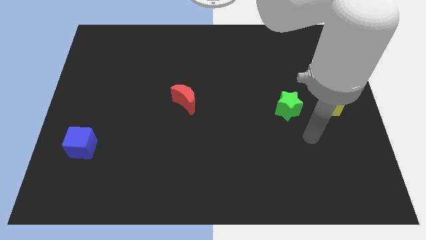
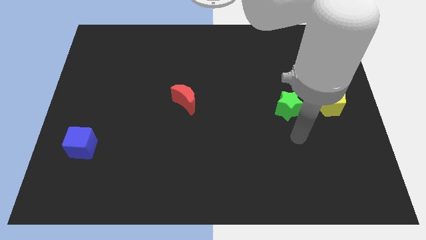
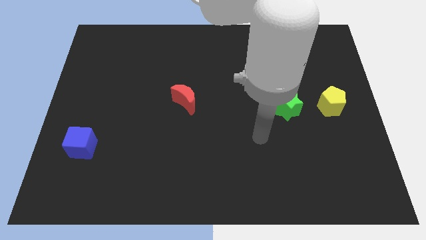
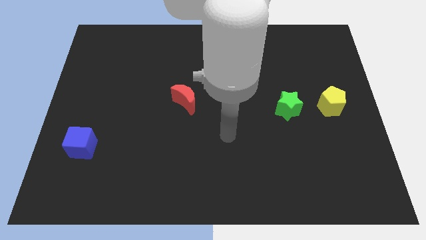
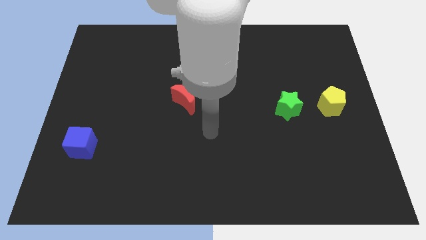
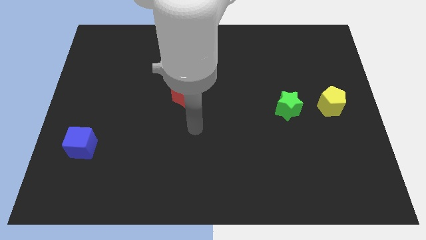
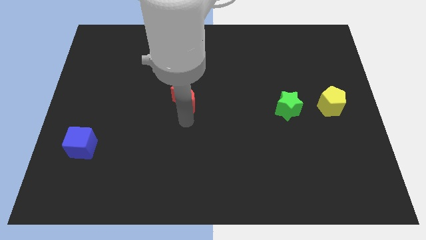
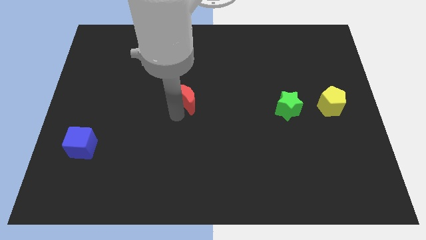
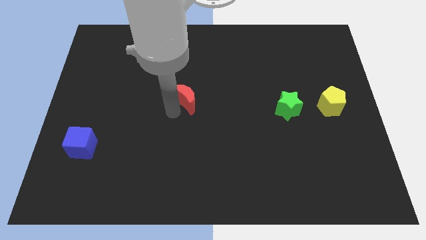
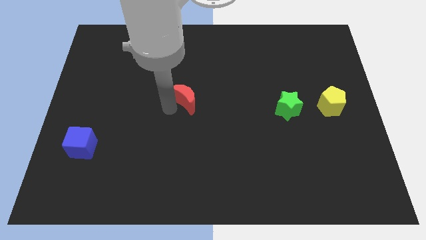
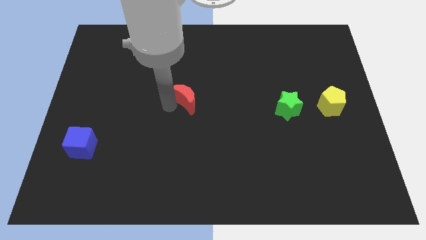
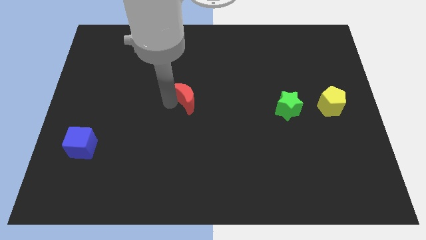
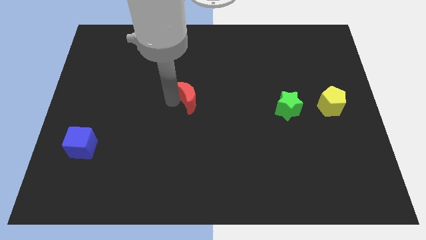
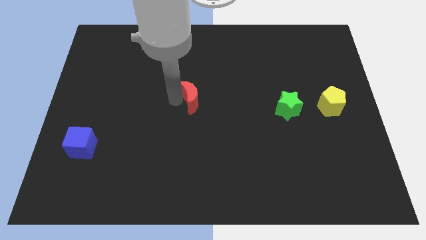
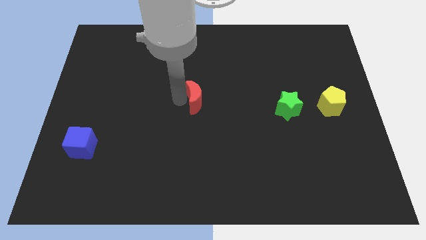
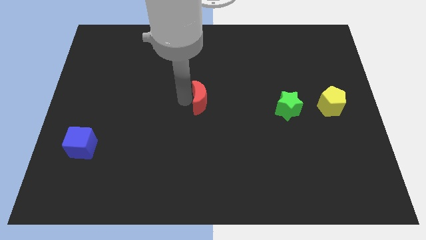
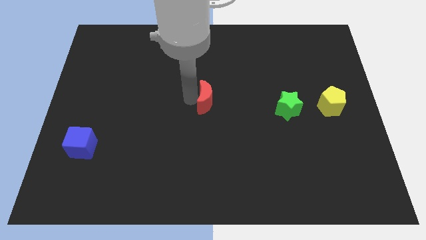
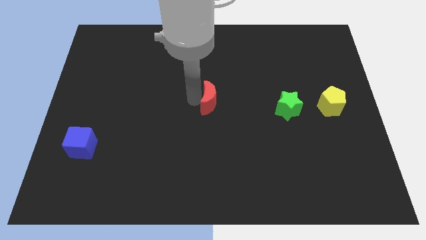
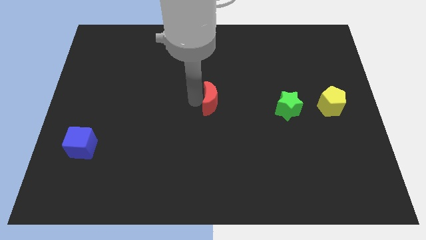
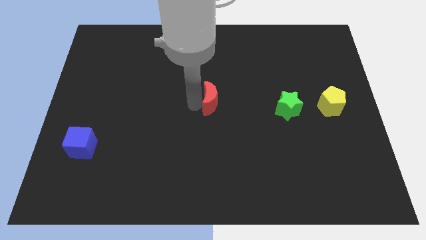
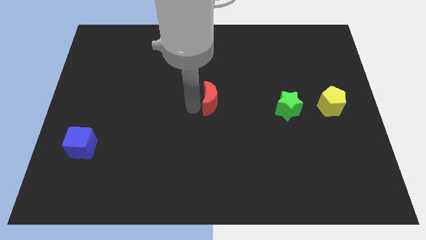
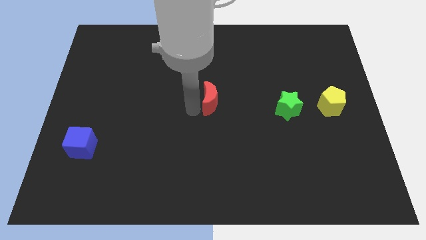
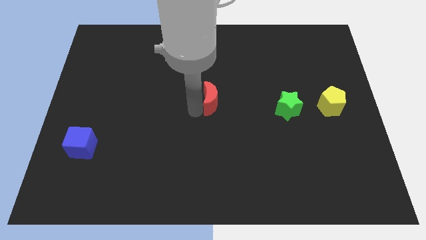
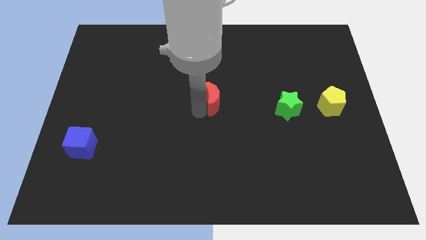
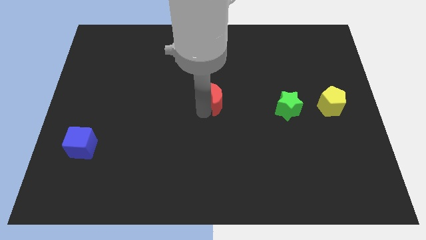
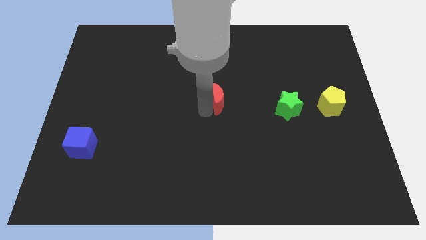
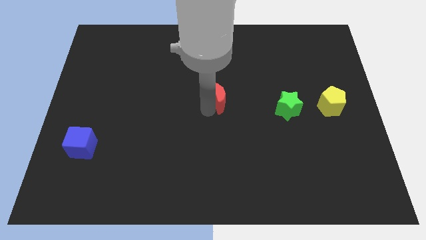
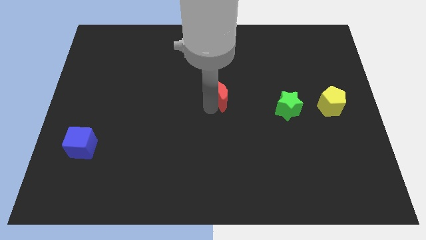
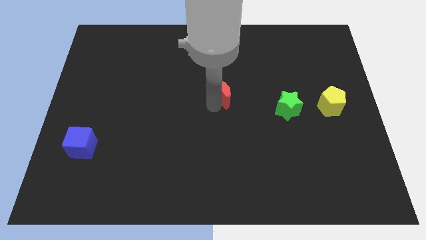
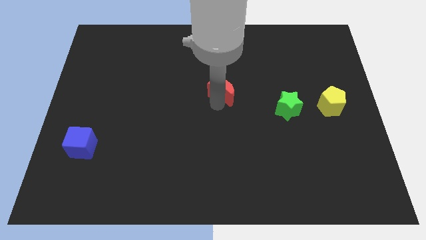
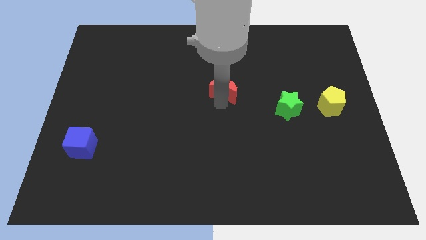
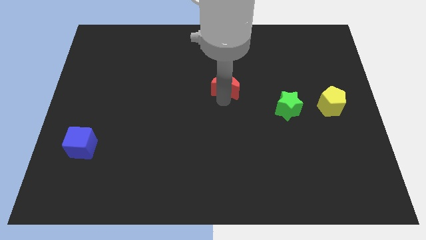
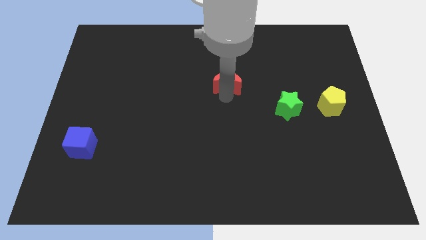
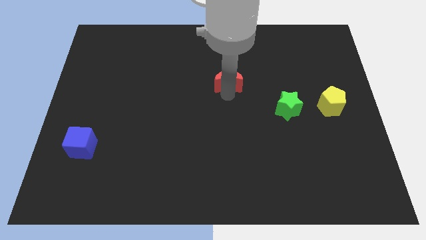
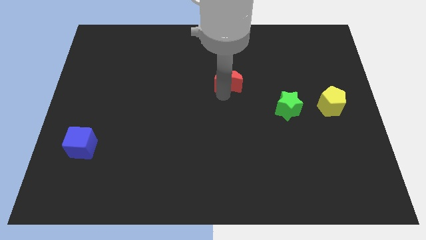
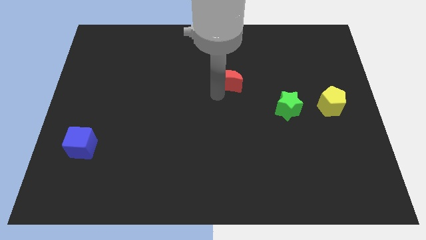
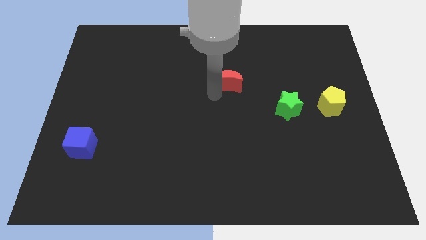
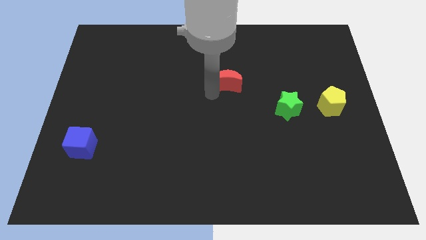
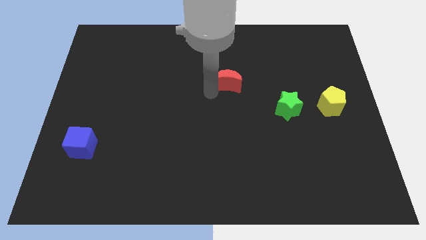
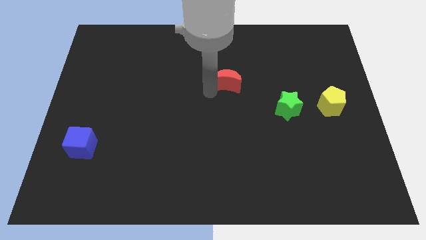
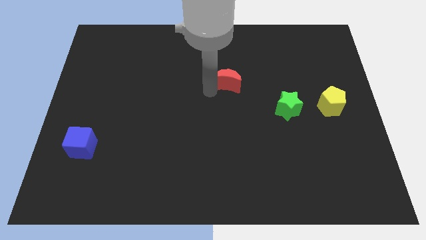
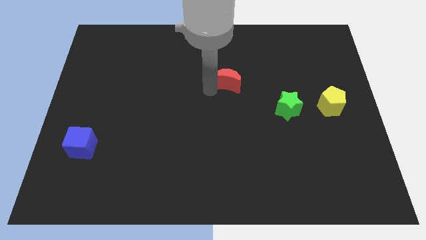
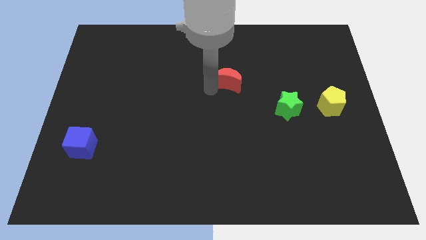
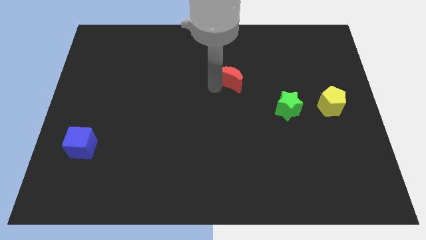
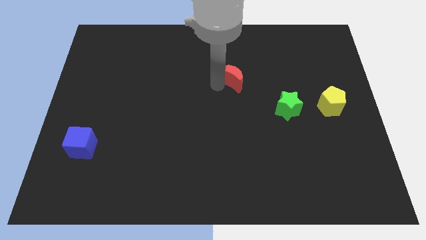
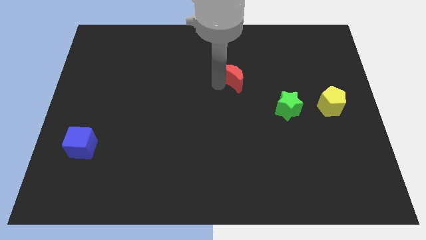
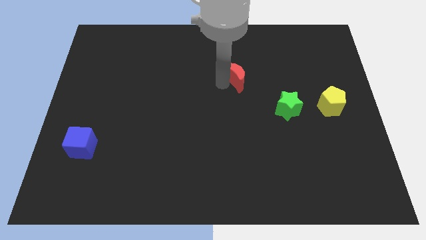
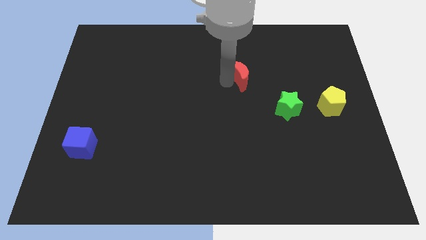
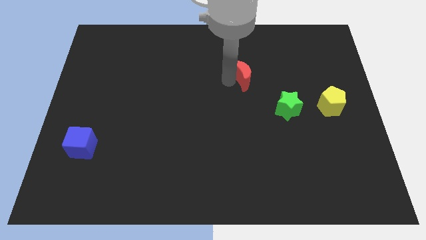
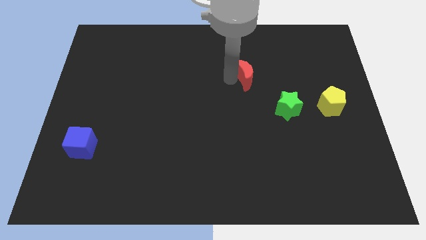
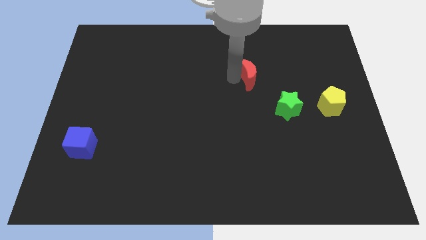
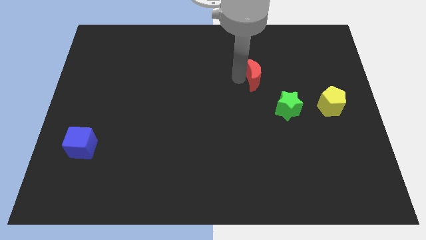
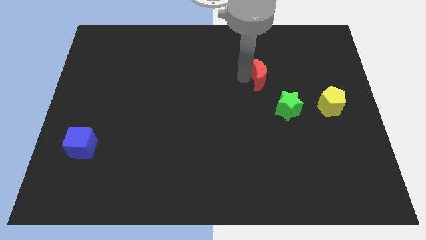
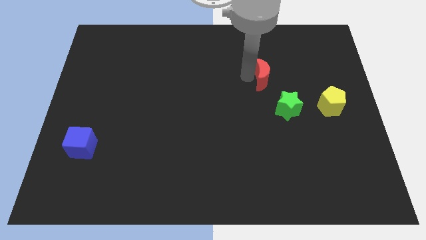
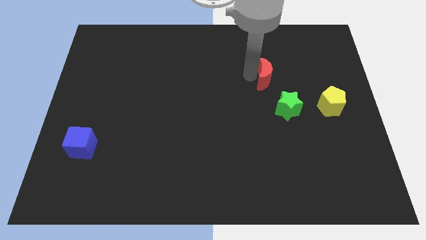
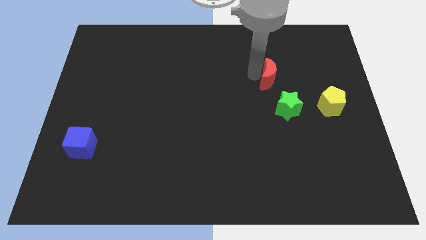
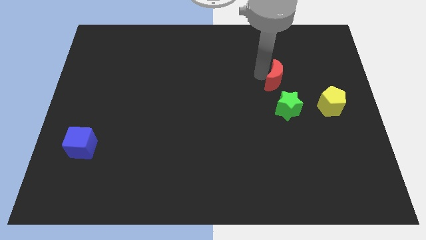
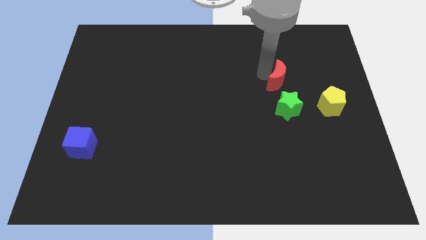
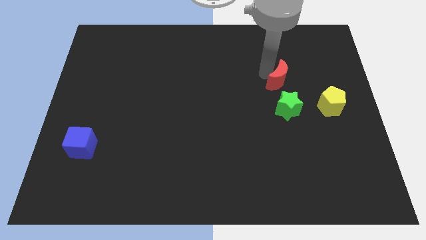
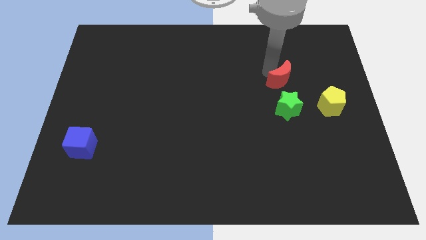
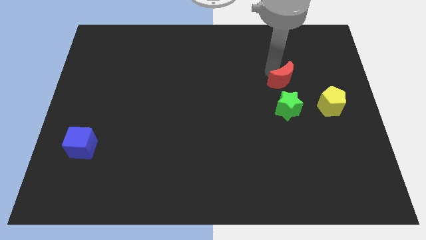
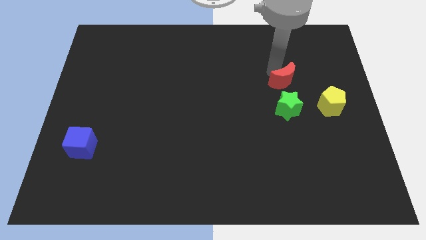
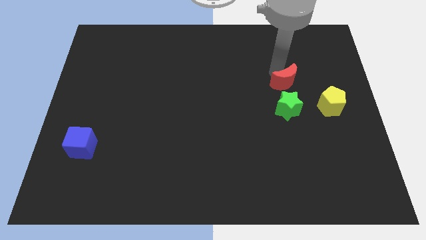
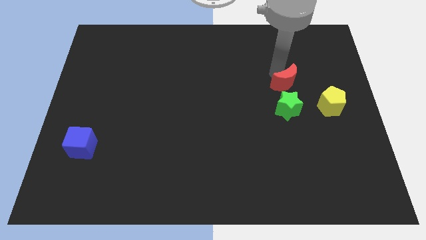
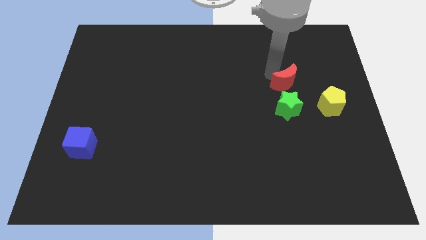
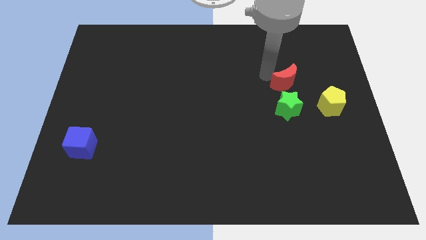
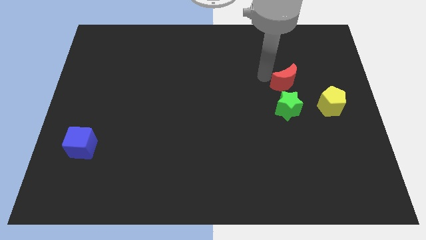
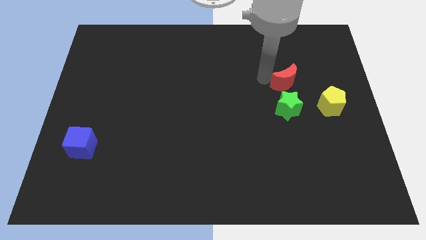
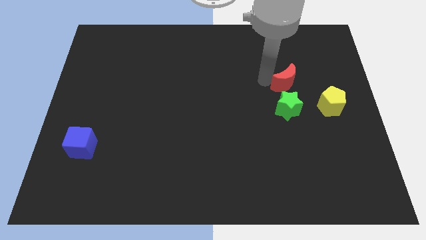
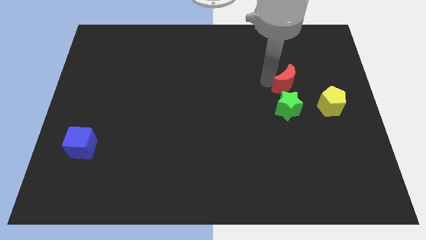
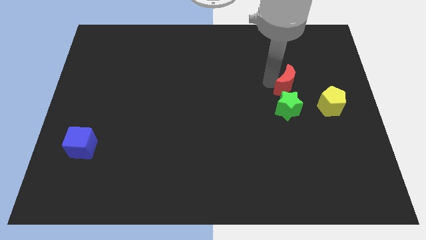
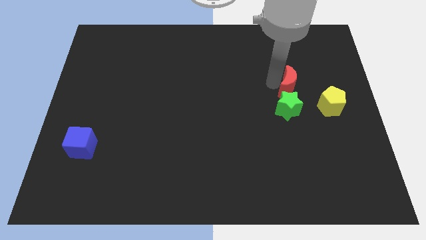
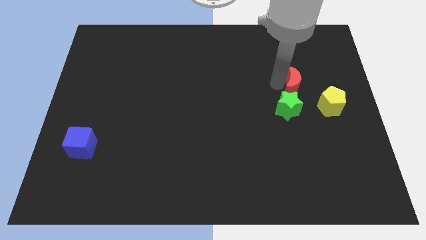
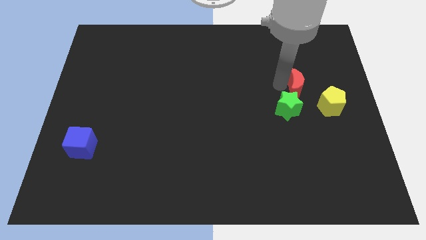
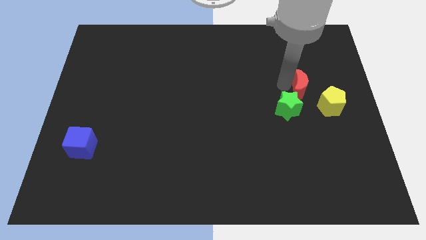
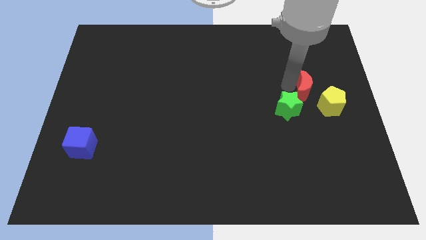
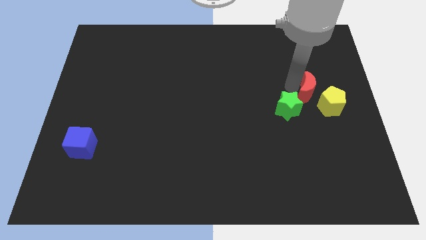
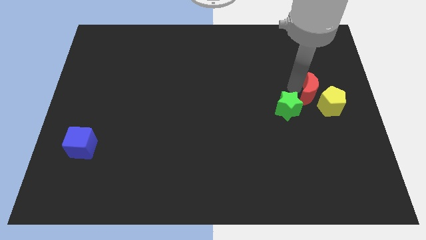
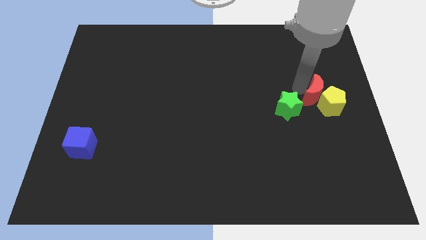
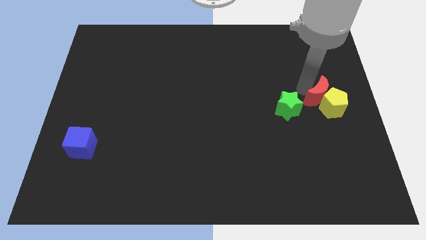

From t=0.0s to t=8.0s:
slide the moon to the yellow block

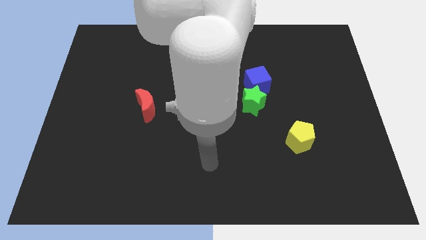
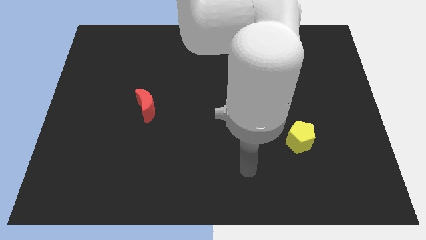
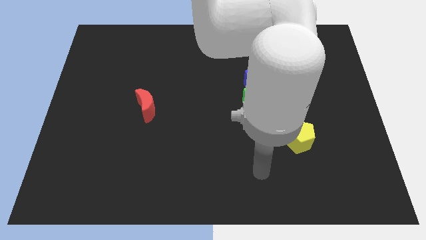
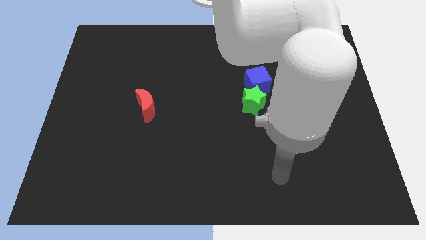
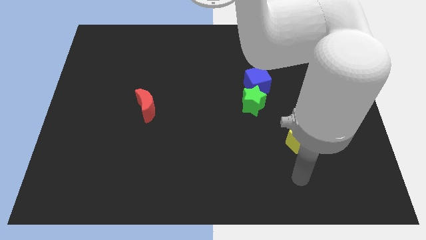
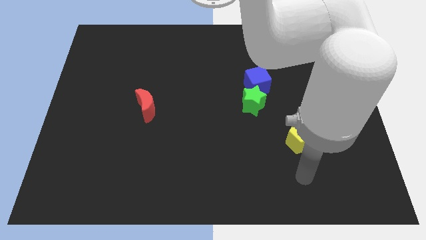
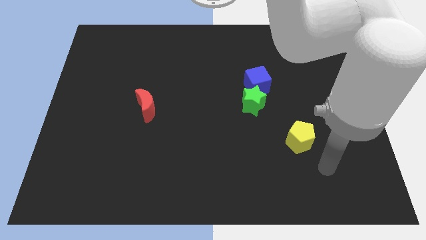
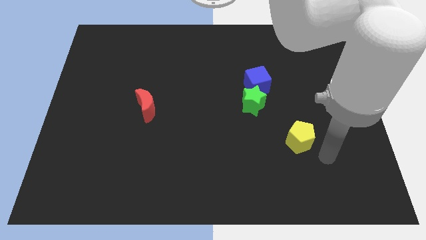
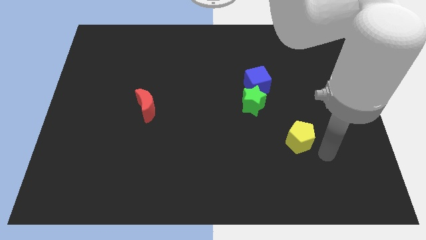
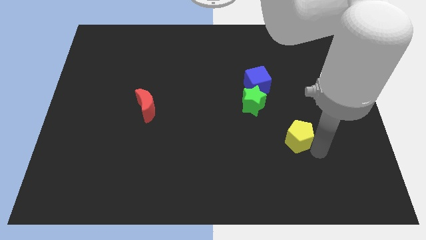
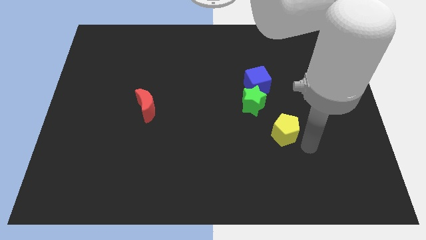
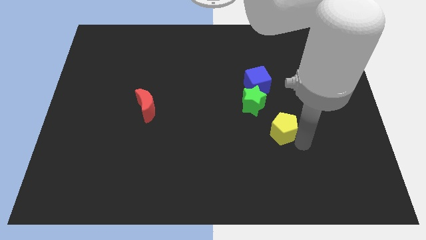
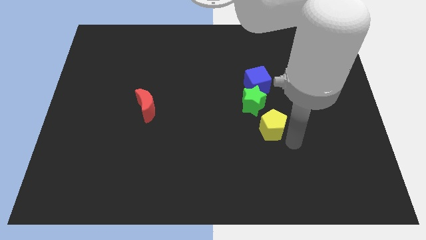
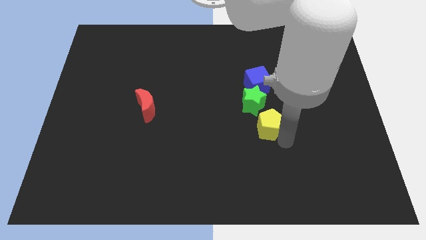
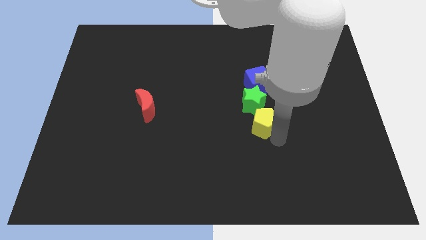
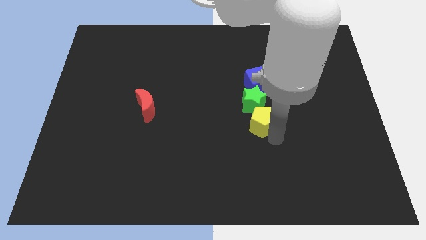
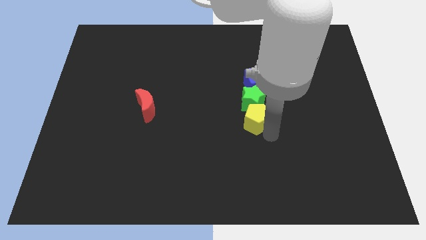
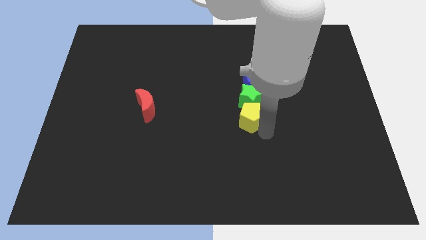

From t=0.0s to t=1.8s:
move the yellow pentagon towards the green star
